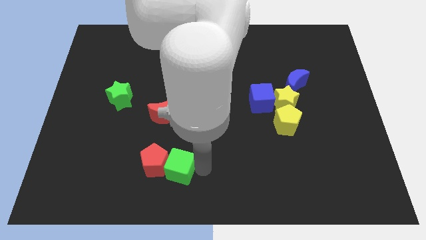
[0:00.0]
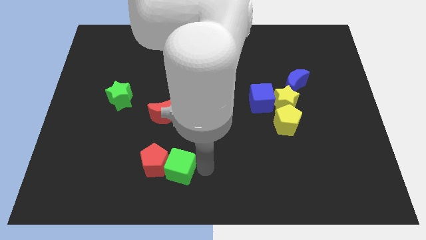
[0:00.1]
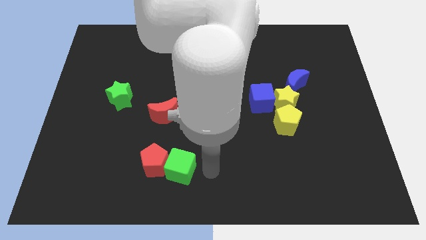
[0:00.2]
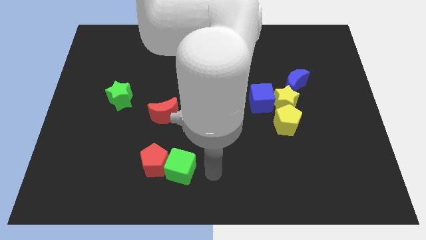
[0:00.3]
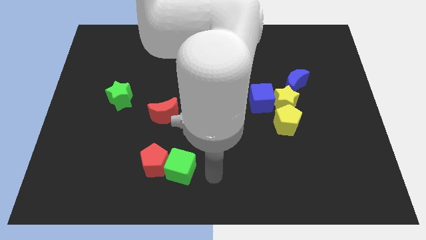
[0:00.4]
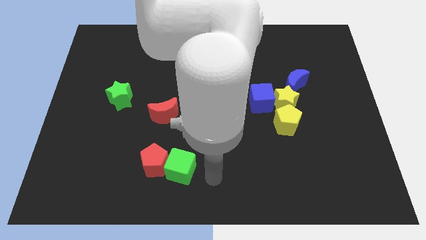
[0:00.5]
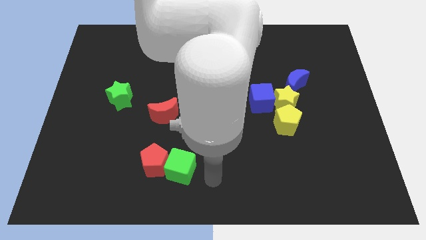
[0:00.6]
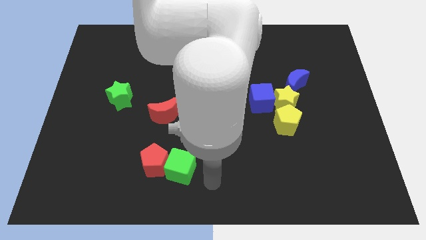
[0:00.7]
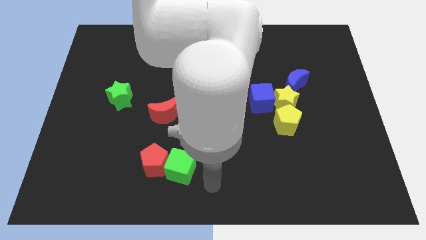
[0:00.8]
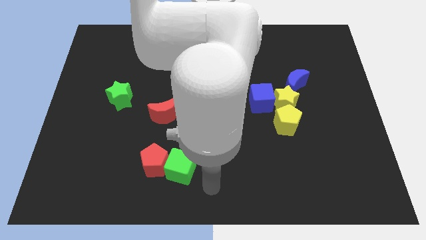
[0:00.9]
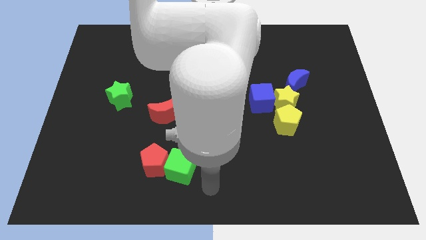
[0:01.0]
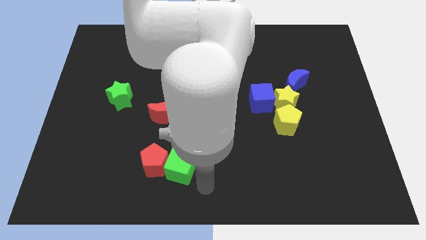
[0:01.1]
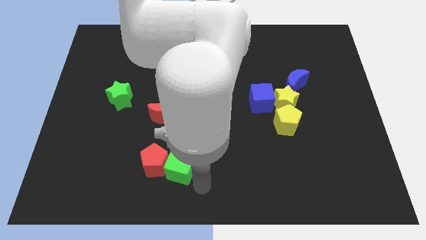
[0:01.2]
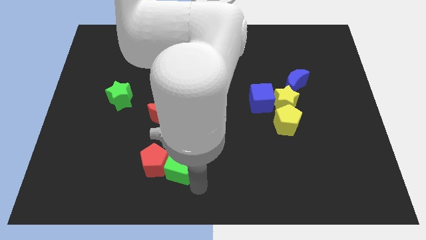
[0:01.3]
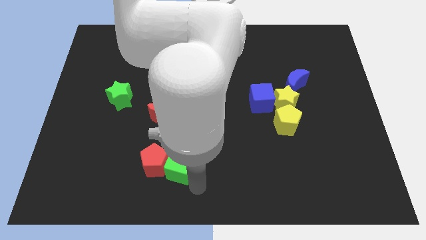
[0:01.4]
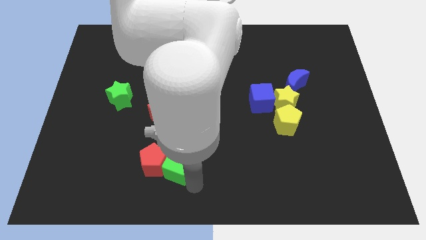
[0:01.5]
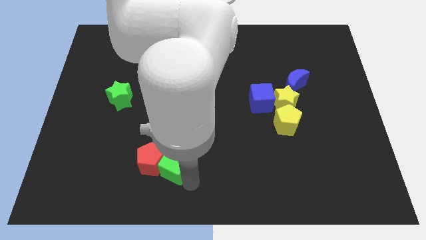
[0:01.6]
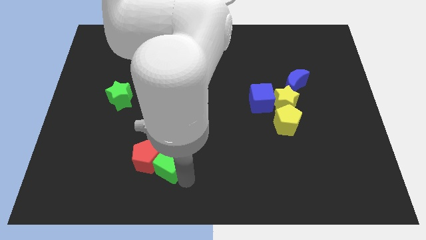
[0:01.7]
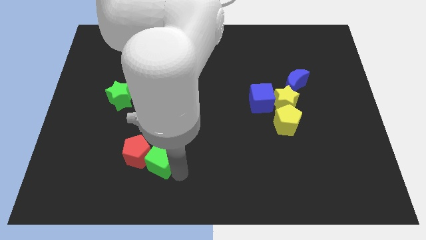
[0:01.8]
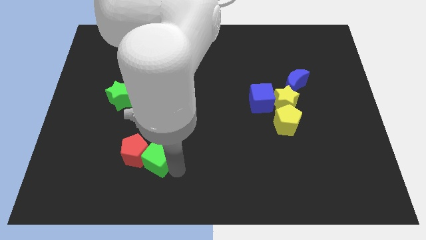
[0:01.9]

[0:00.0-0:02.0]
push the green cube and red pentagon slightly towards the left side of the board

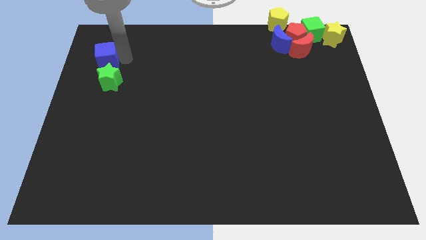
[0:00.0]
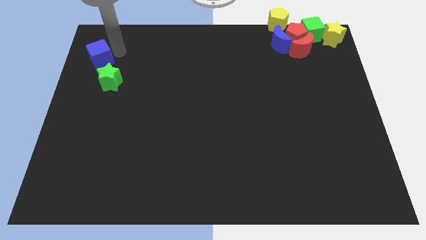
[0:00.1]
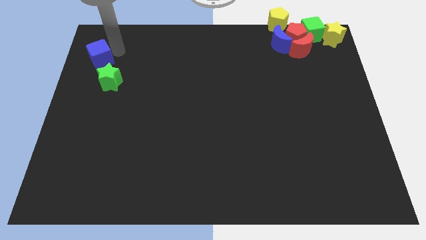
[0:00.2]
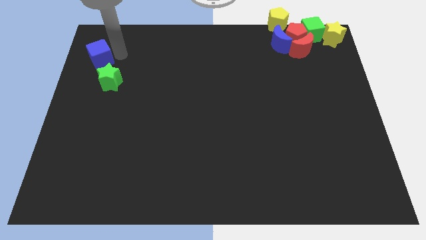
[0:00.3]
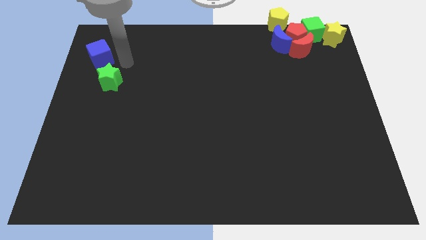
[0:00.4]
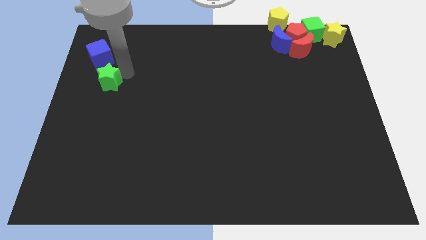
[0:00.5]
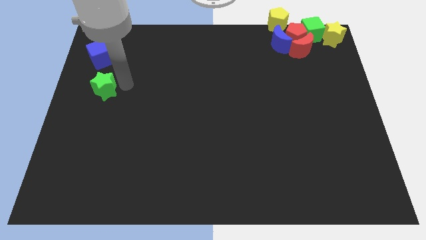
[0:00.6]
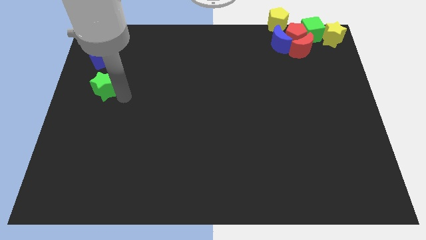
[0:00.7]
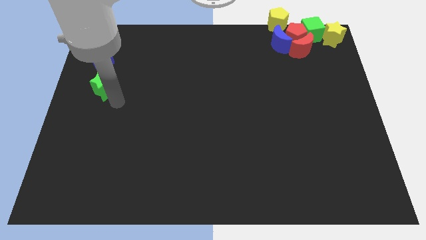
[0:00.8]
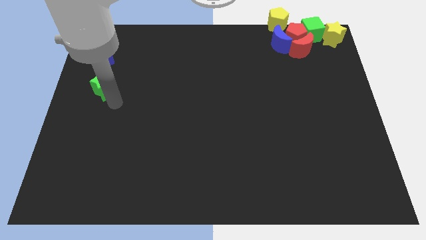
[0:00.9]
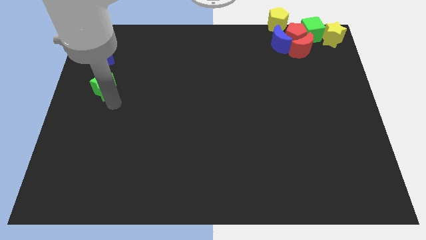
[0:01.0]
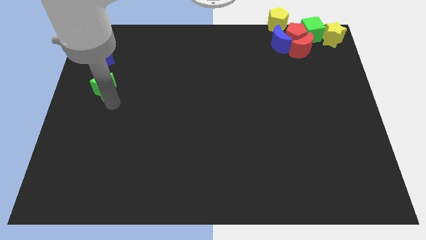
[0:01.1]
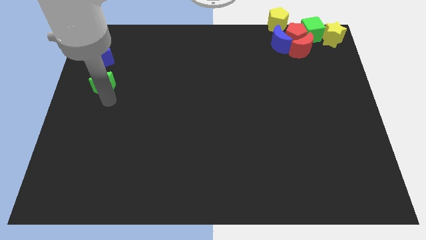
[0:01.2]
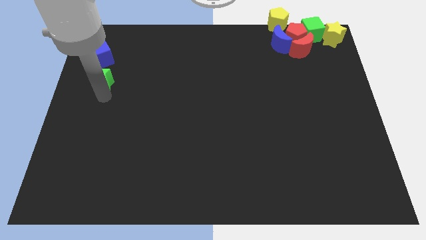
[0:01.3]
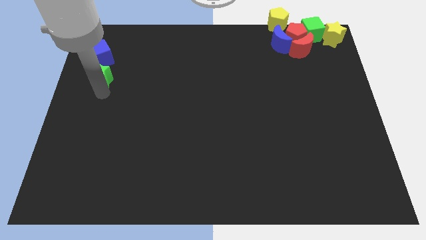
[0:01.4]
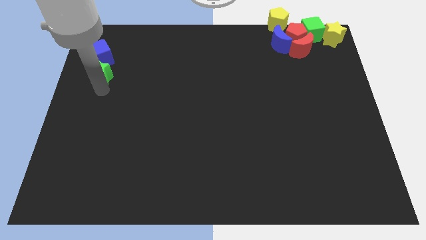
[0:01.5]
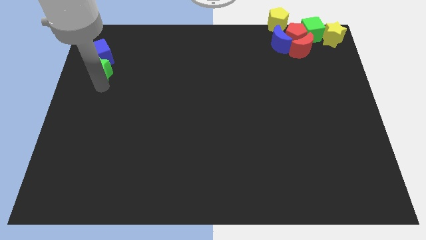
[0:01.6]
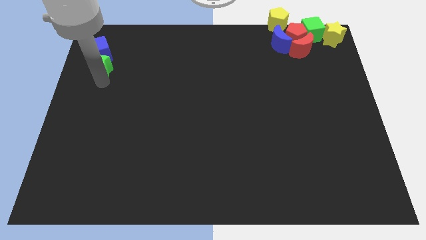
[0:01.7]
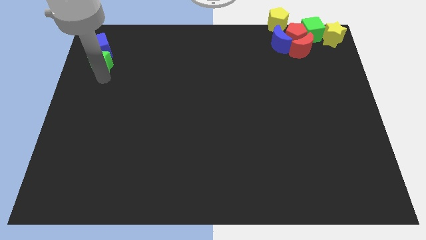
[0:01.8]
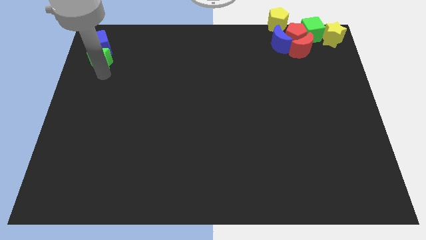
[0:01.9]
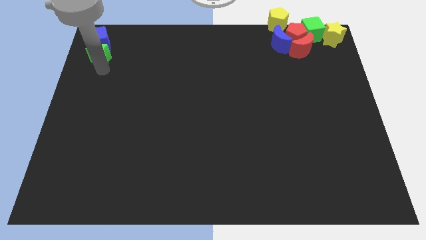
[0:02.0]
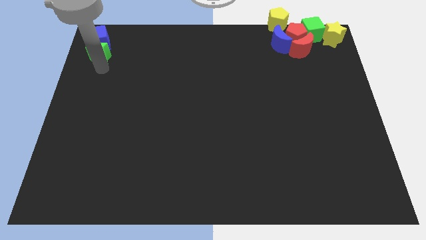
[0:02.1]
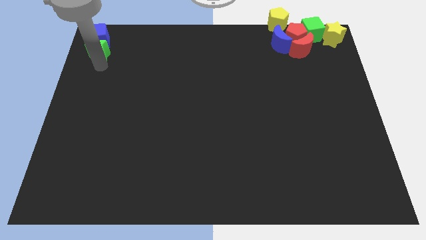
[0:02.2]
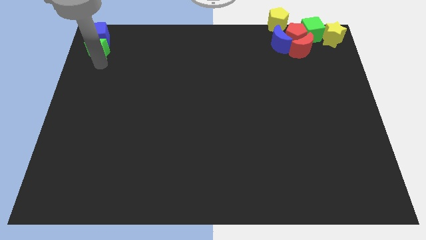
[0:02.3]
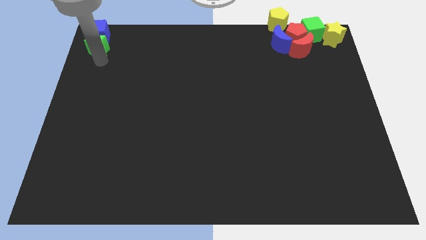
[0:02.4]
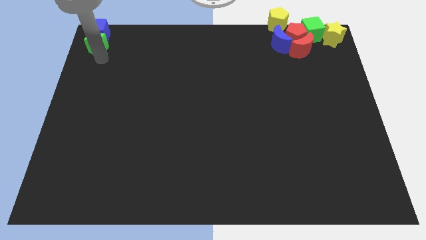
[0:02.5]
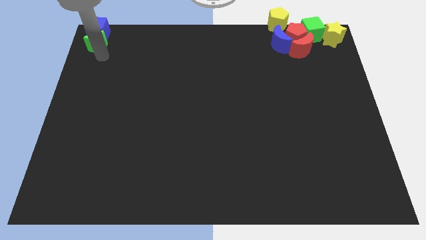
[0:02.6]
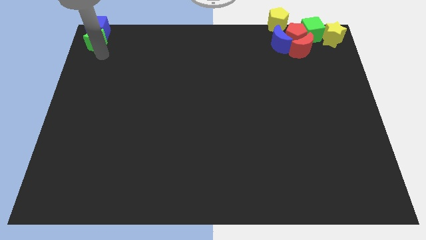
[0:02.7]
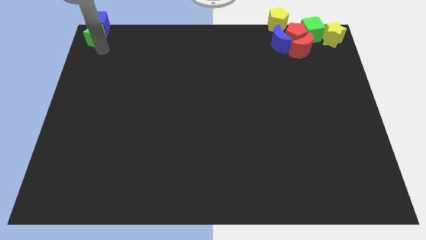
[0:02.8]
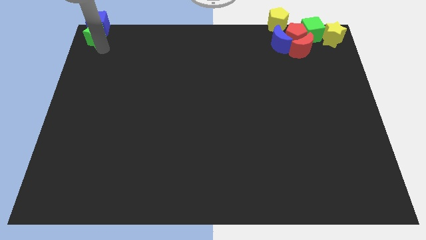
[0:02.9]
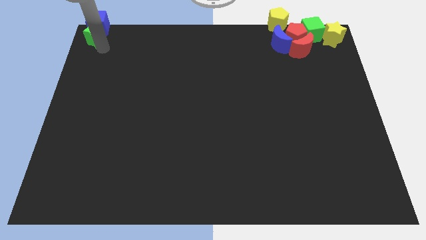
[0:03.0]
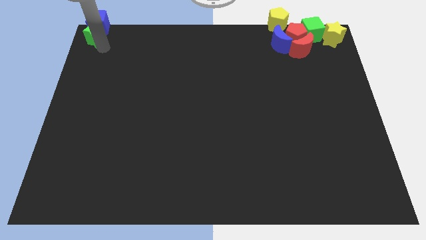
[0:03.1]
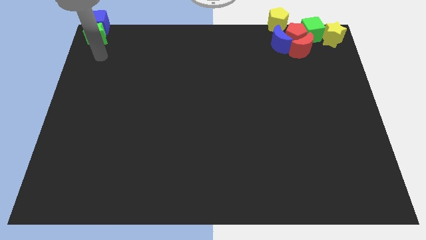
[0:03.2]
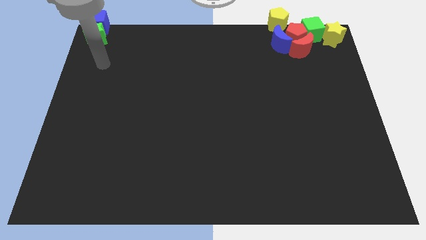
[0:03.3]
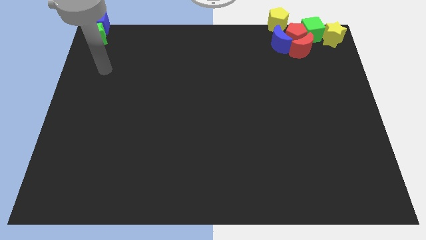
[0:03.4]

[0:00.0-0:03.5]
push the blue cube and green star to the top left

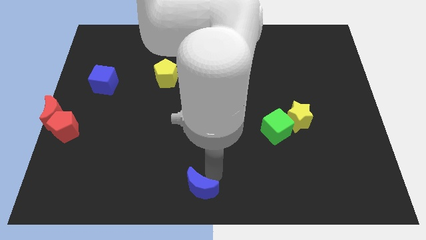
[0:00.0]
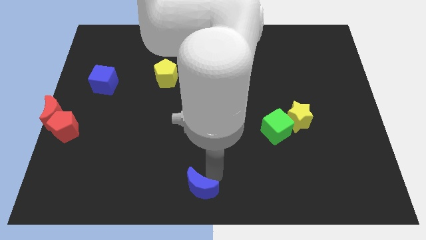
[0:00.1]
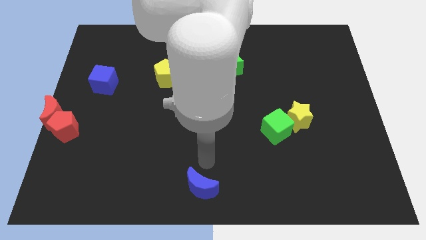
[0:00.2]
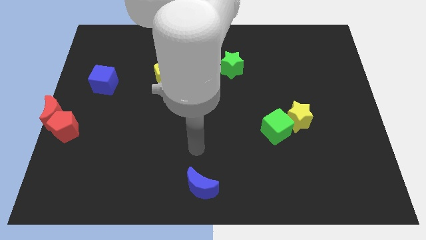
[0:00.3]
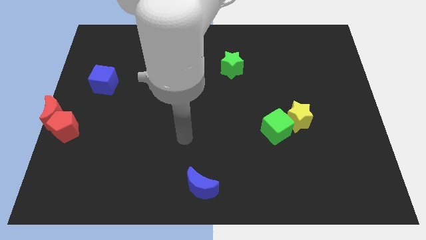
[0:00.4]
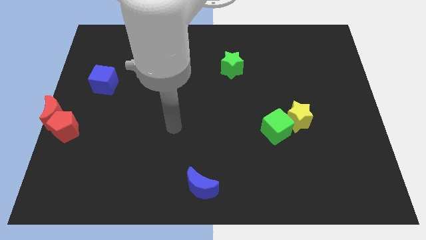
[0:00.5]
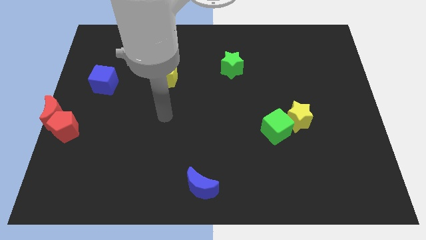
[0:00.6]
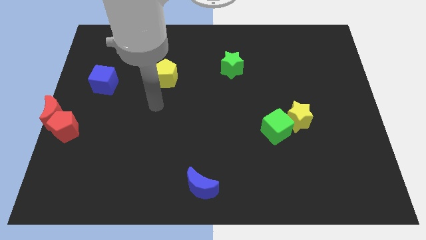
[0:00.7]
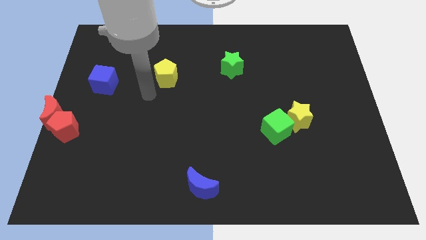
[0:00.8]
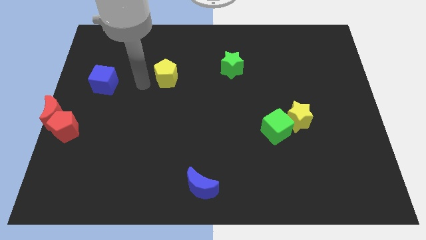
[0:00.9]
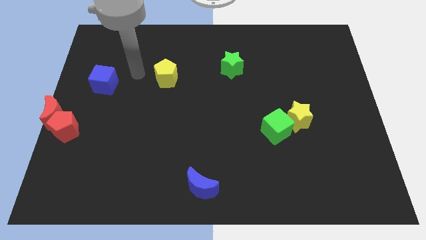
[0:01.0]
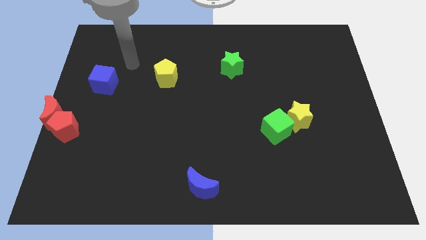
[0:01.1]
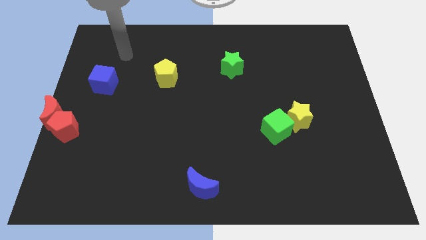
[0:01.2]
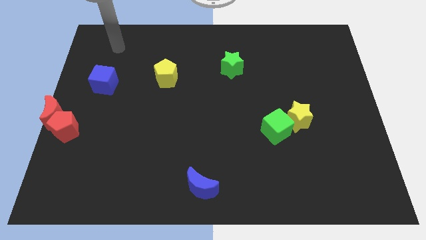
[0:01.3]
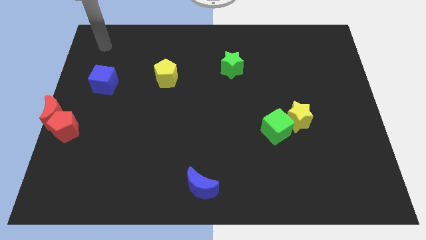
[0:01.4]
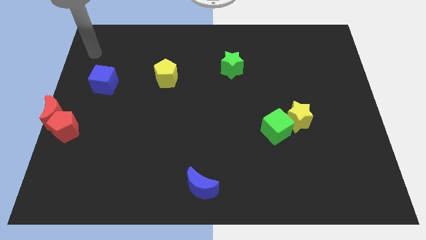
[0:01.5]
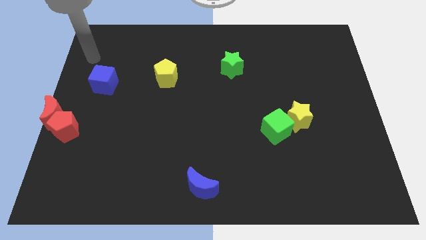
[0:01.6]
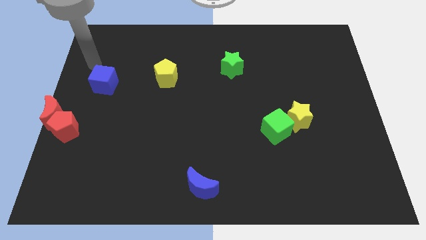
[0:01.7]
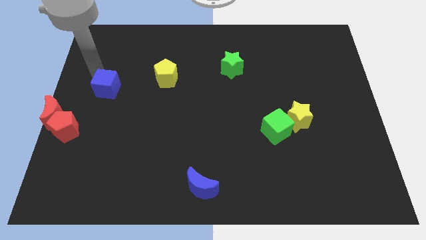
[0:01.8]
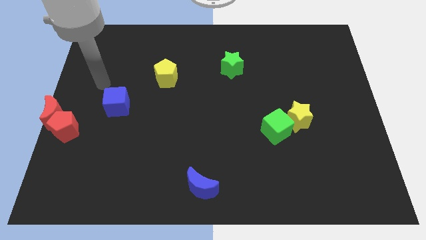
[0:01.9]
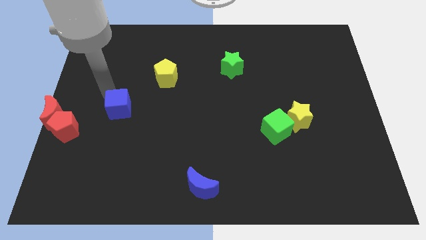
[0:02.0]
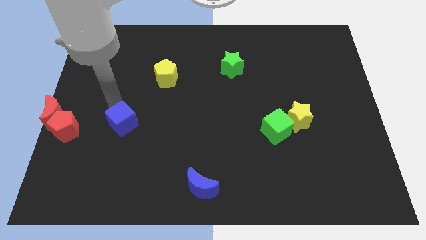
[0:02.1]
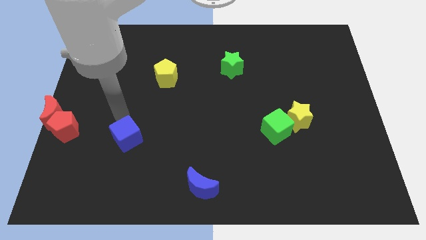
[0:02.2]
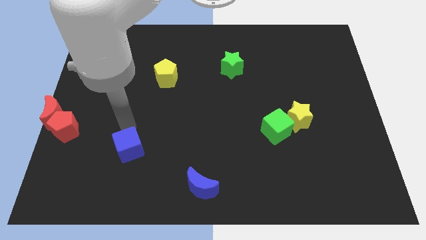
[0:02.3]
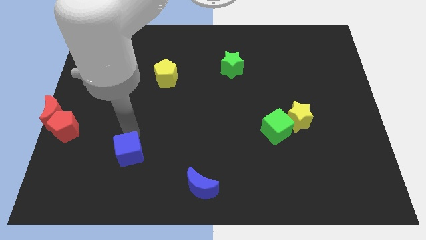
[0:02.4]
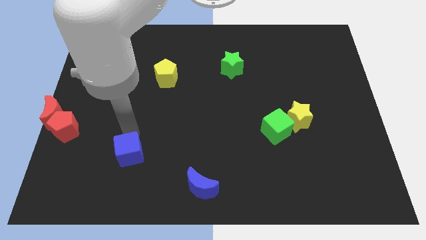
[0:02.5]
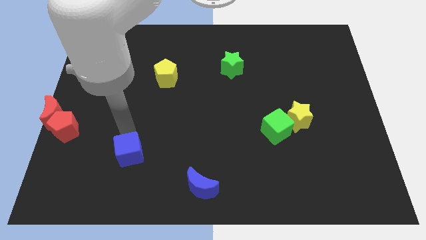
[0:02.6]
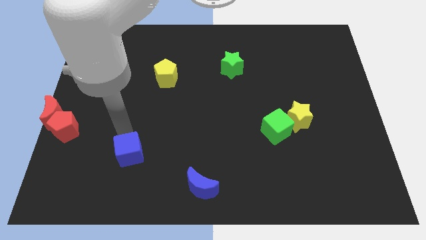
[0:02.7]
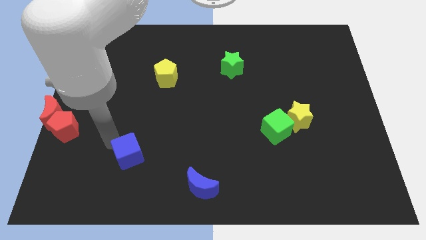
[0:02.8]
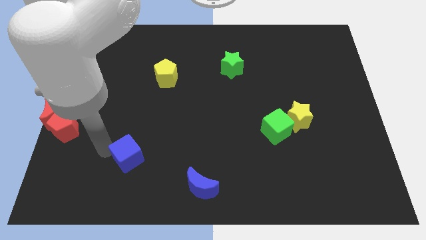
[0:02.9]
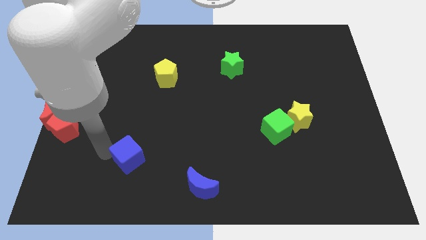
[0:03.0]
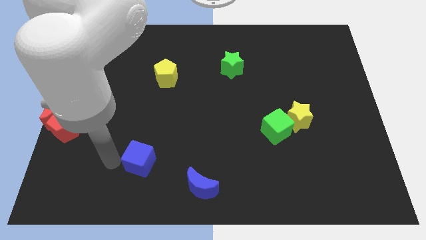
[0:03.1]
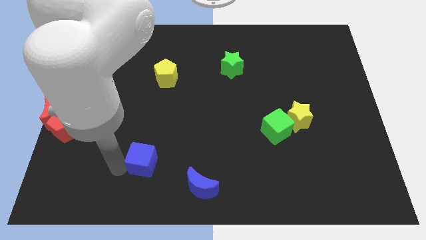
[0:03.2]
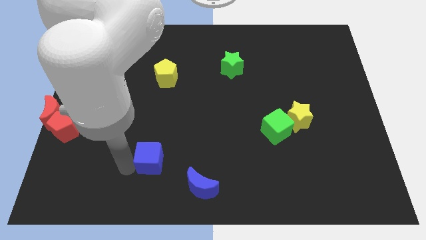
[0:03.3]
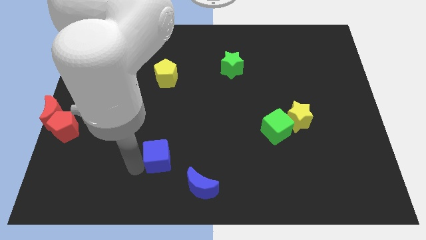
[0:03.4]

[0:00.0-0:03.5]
place the blue cube in between the red pentagon and blue moon
